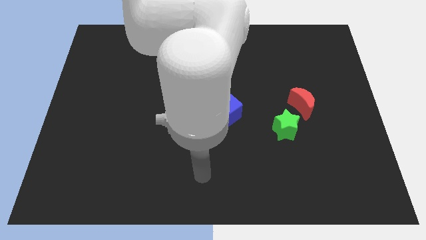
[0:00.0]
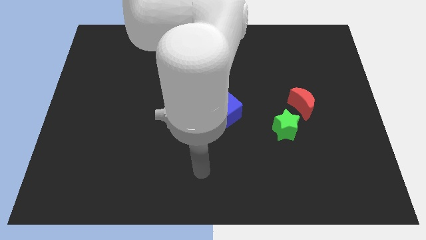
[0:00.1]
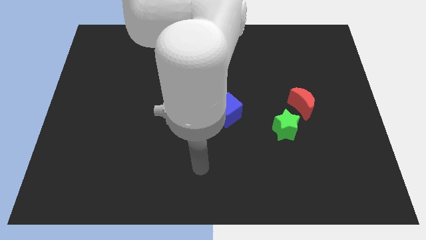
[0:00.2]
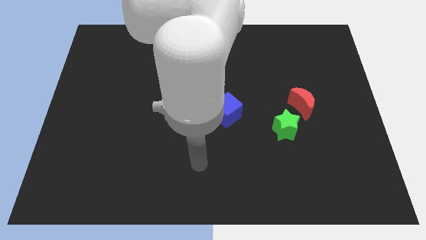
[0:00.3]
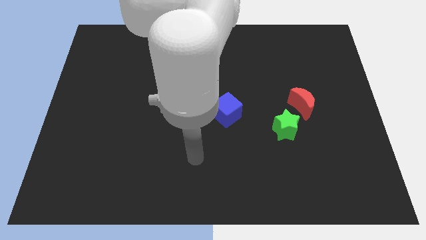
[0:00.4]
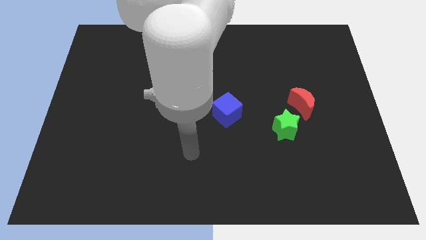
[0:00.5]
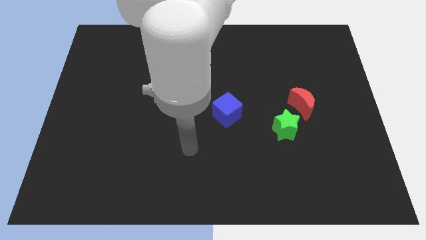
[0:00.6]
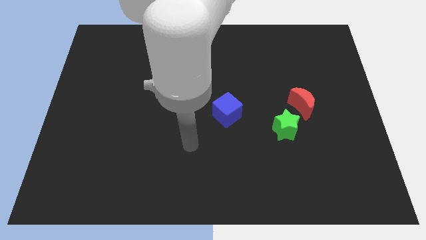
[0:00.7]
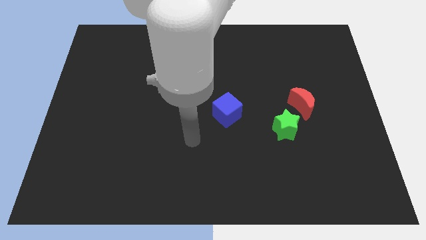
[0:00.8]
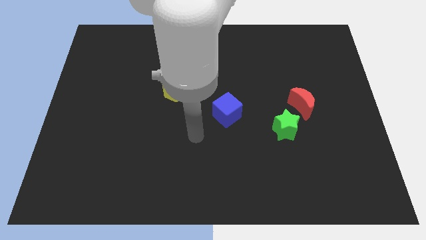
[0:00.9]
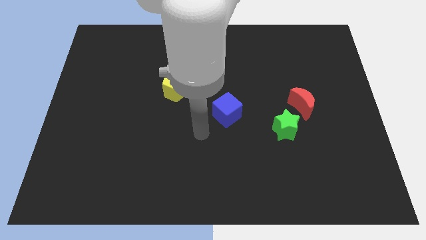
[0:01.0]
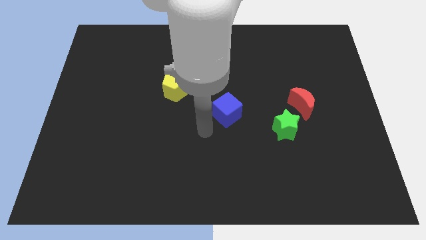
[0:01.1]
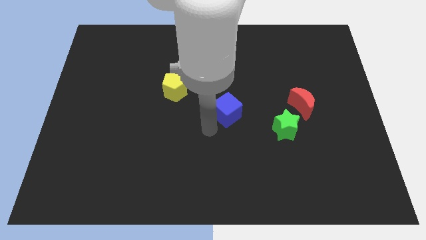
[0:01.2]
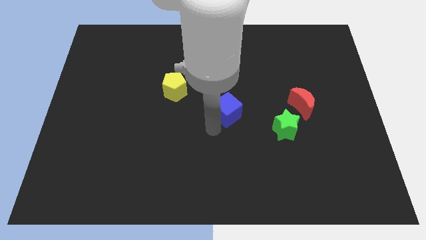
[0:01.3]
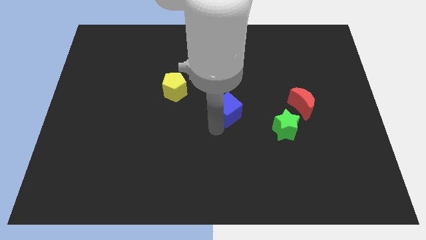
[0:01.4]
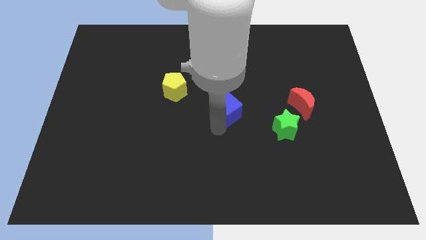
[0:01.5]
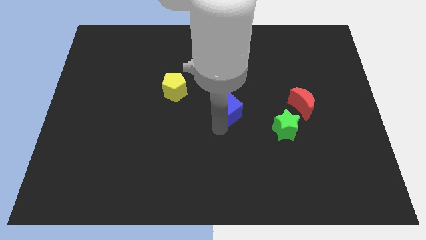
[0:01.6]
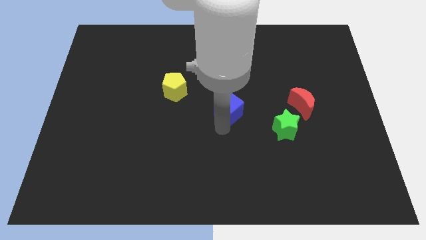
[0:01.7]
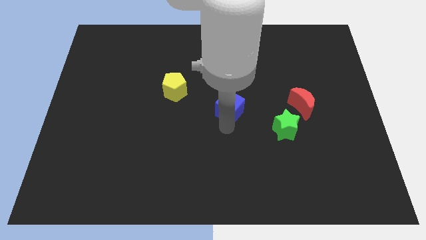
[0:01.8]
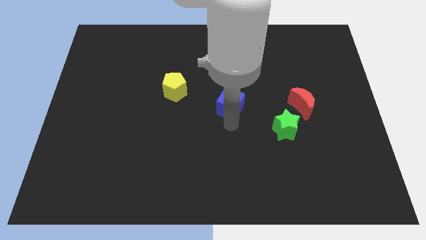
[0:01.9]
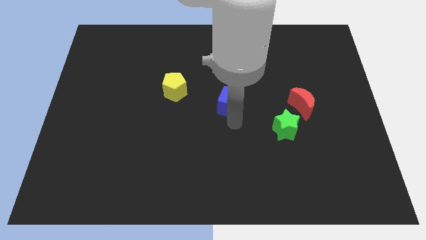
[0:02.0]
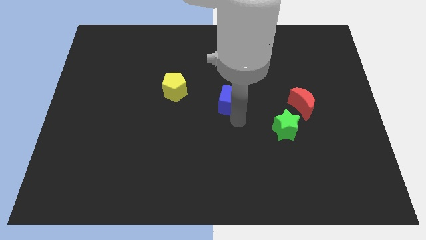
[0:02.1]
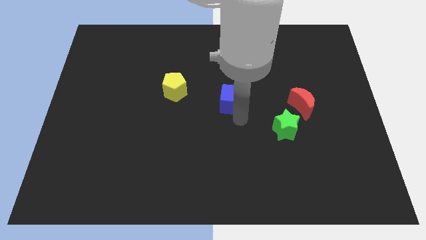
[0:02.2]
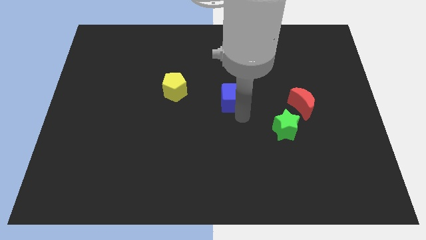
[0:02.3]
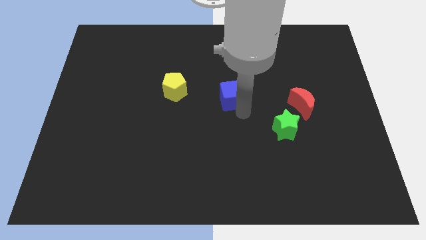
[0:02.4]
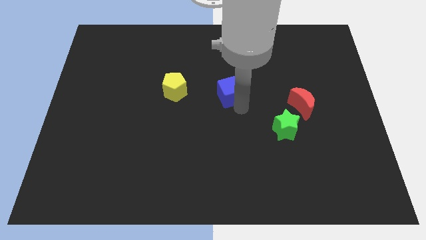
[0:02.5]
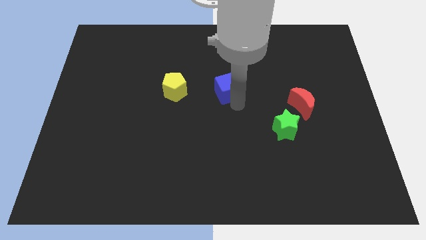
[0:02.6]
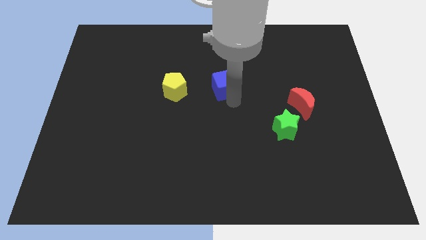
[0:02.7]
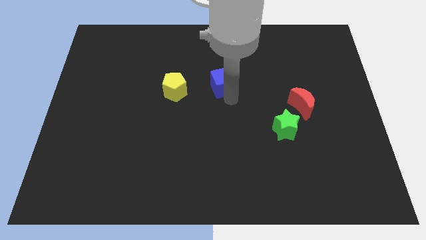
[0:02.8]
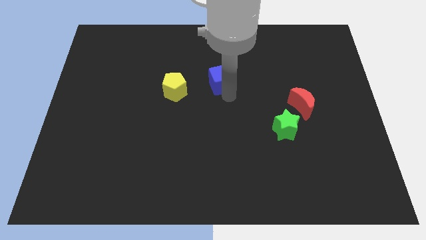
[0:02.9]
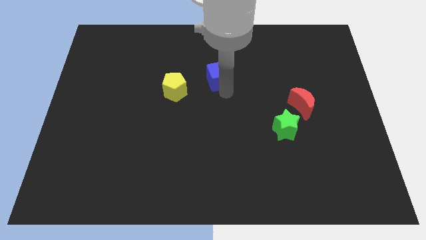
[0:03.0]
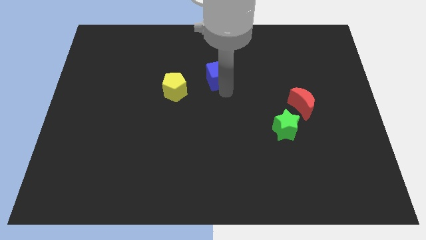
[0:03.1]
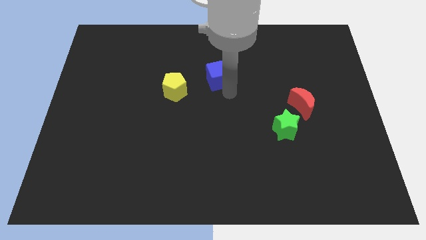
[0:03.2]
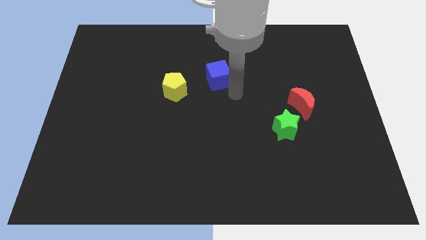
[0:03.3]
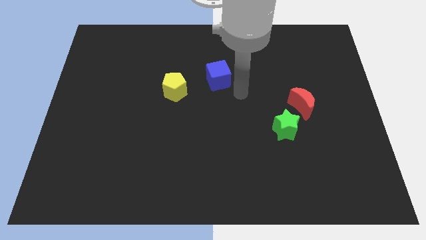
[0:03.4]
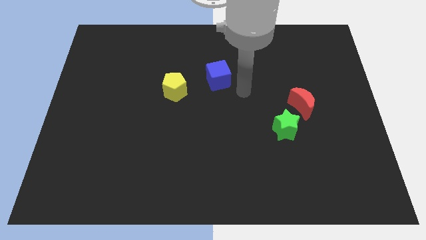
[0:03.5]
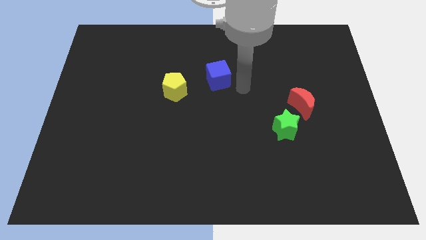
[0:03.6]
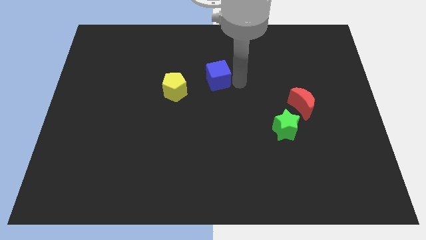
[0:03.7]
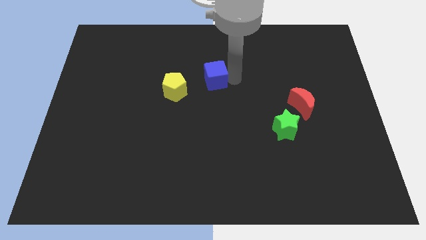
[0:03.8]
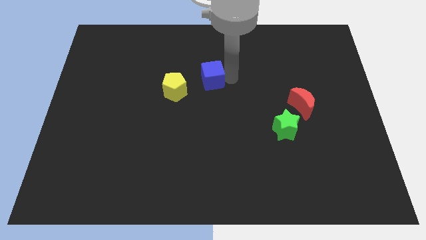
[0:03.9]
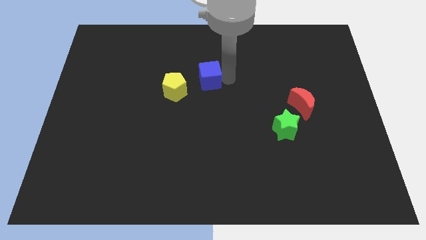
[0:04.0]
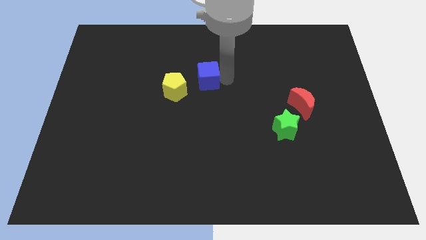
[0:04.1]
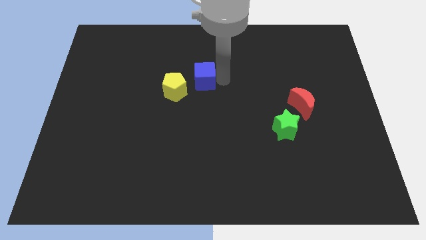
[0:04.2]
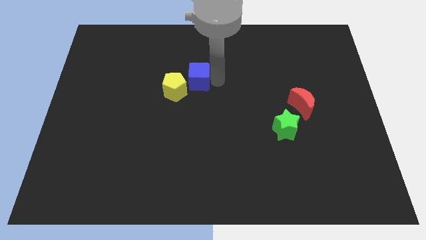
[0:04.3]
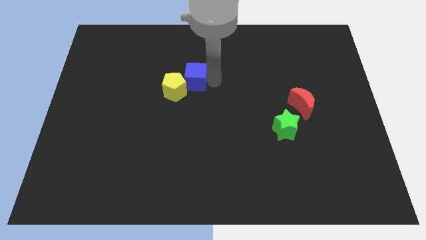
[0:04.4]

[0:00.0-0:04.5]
put the blue block next to the pentagon

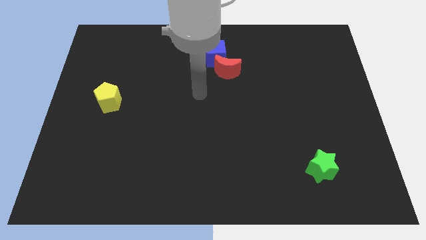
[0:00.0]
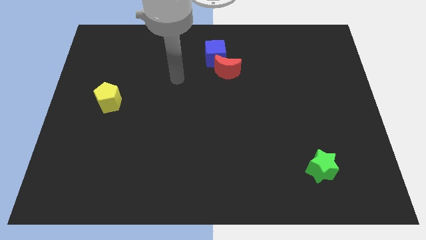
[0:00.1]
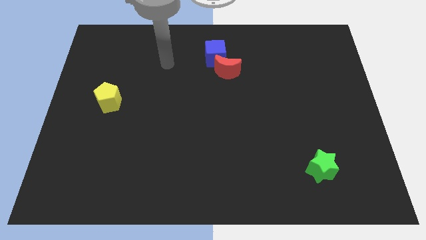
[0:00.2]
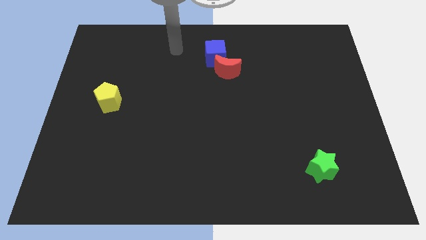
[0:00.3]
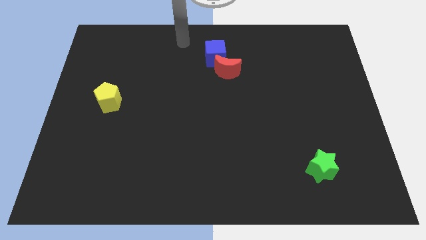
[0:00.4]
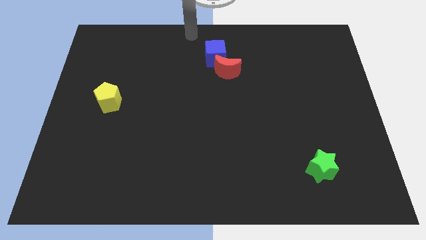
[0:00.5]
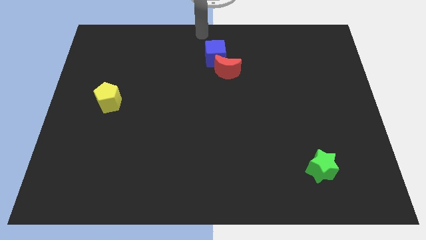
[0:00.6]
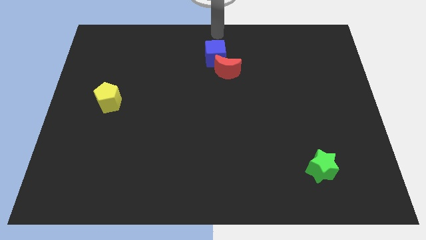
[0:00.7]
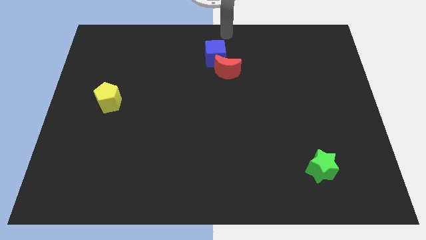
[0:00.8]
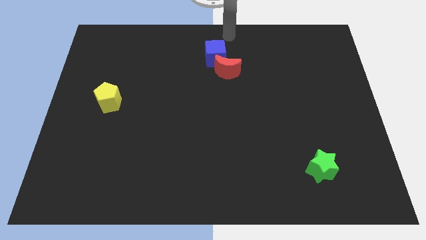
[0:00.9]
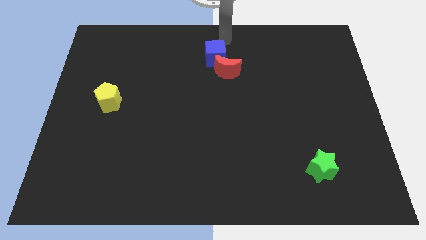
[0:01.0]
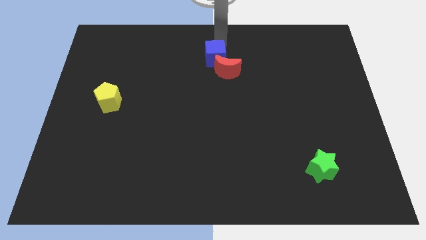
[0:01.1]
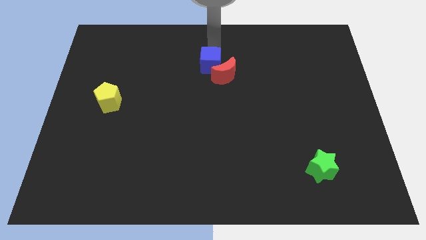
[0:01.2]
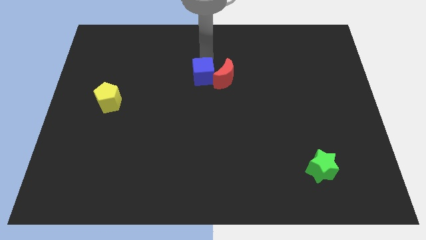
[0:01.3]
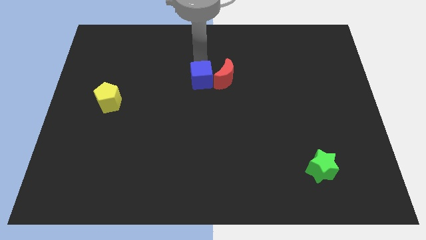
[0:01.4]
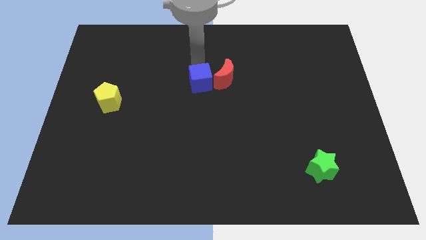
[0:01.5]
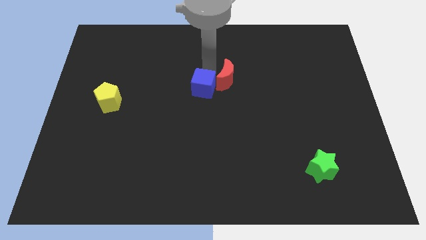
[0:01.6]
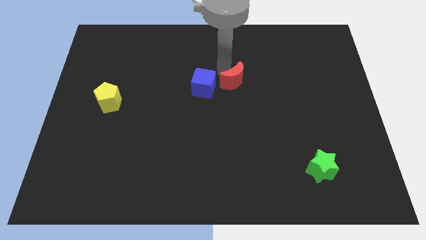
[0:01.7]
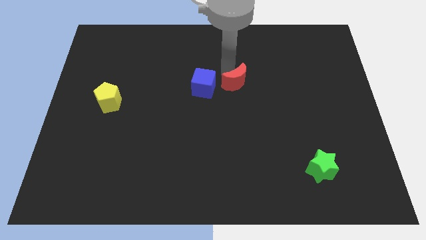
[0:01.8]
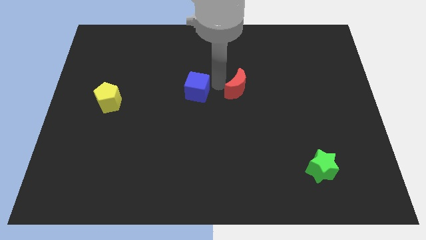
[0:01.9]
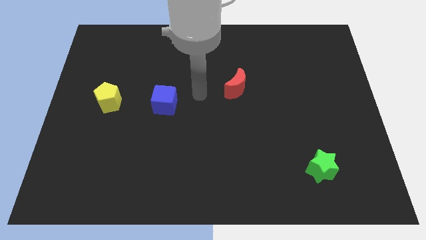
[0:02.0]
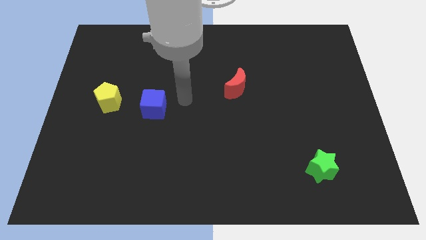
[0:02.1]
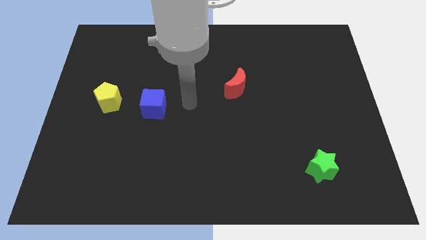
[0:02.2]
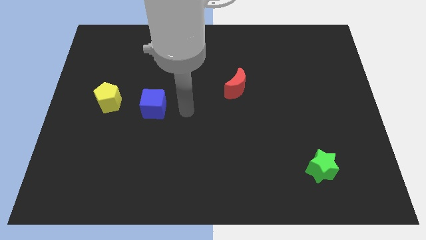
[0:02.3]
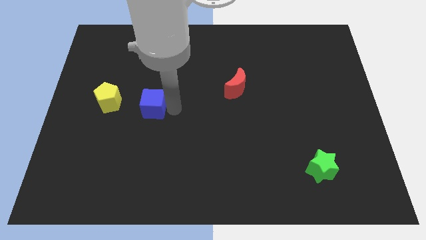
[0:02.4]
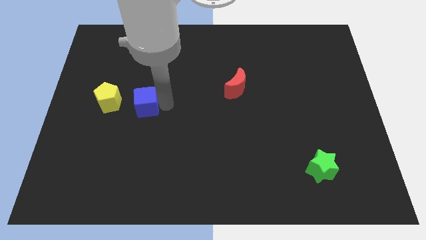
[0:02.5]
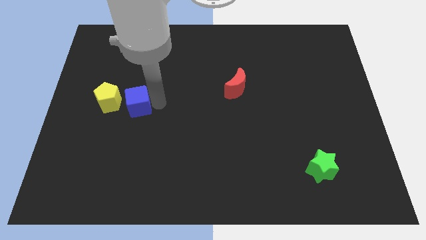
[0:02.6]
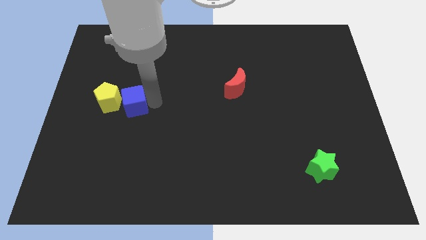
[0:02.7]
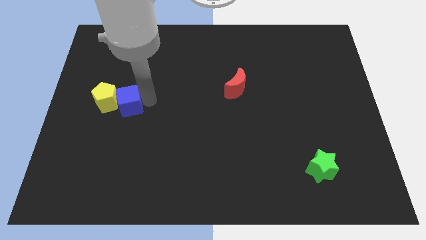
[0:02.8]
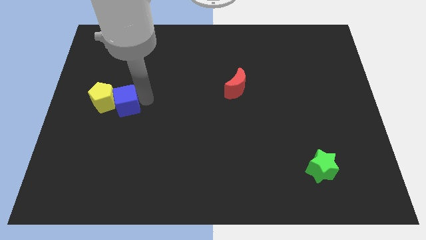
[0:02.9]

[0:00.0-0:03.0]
slide the blue block next to the yellow pentagon

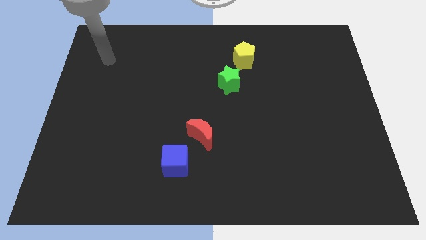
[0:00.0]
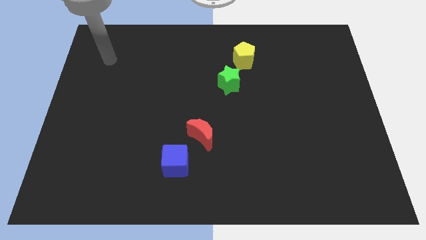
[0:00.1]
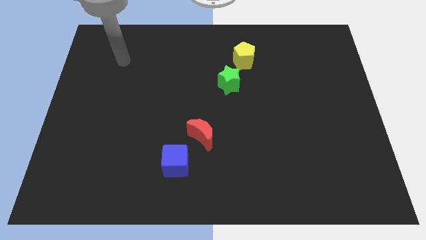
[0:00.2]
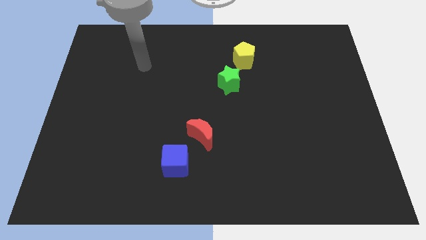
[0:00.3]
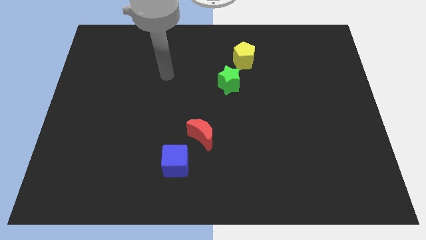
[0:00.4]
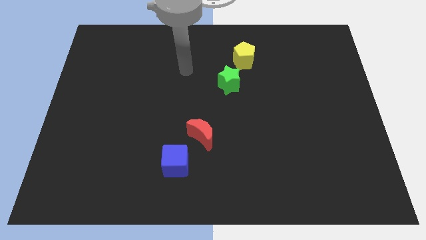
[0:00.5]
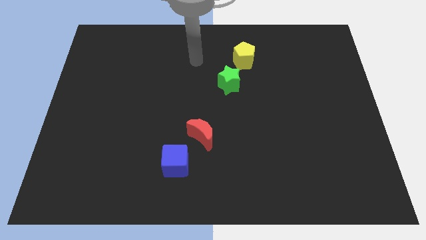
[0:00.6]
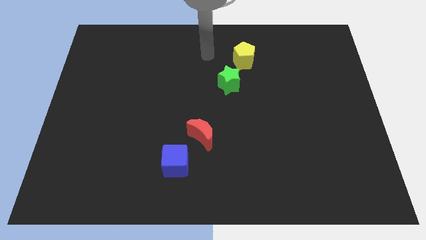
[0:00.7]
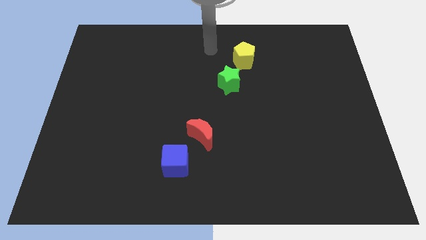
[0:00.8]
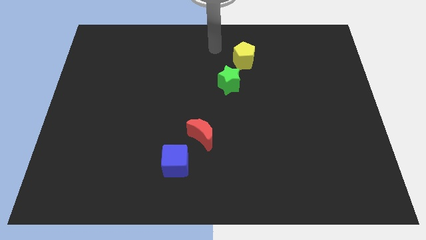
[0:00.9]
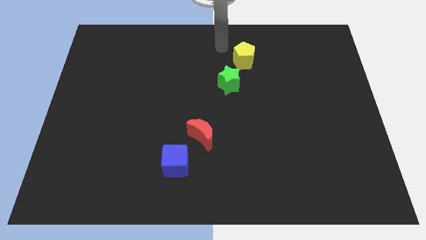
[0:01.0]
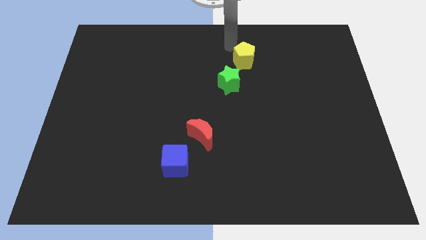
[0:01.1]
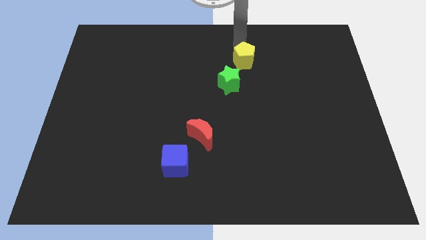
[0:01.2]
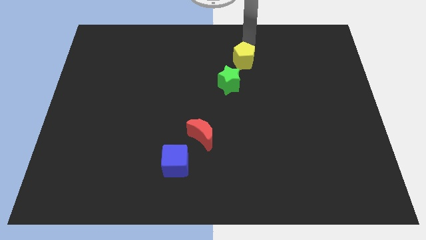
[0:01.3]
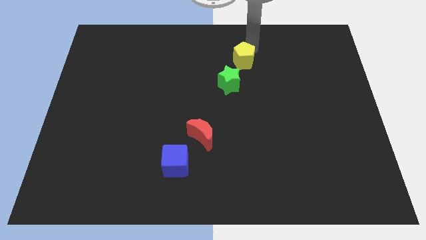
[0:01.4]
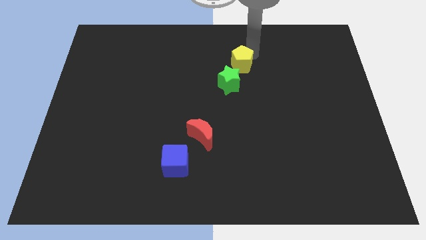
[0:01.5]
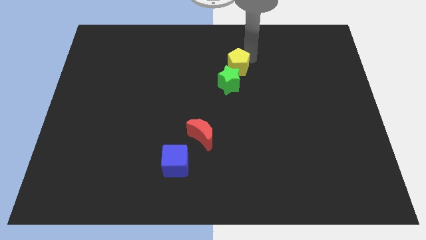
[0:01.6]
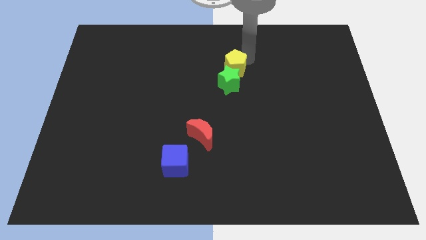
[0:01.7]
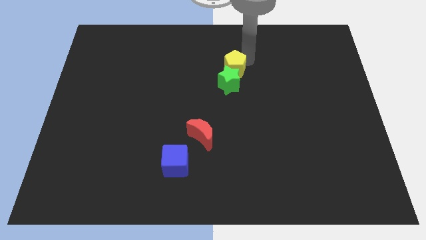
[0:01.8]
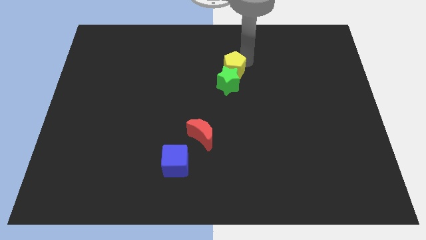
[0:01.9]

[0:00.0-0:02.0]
slide the pentagon next to the green star
